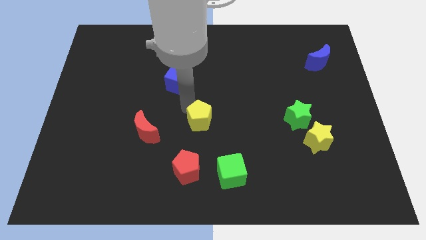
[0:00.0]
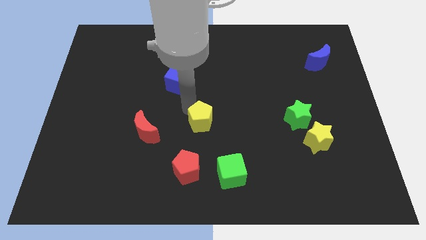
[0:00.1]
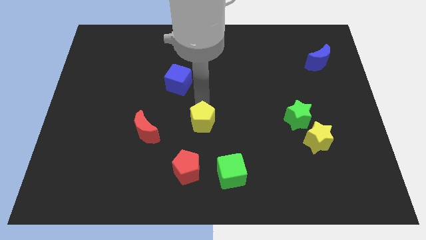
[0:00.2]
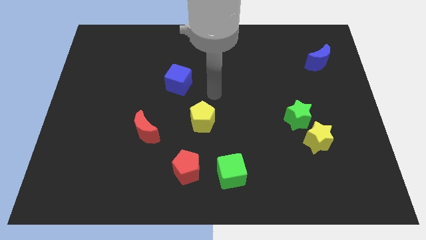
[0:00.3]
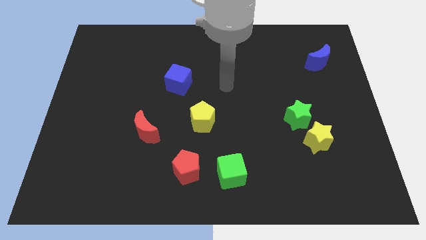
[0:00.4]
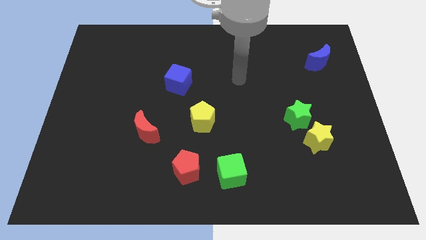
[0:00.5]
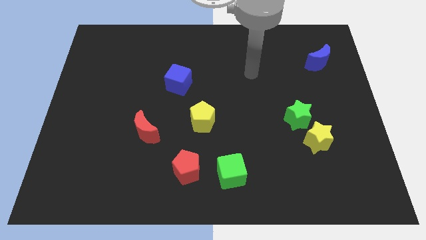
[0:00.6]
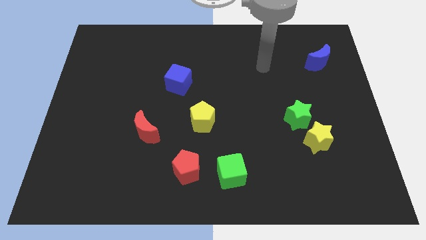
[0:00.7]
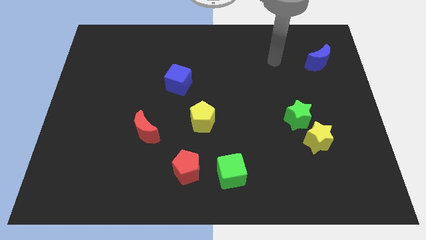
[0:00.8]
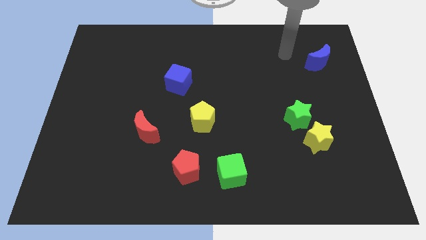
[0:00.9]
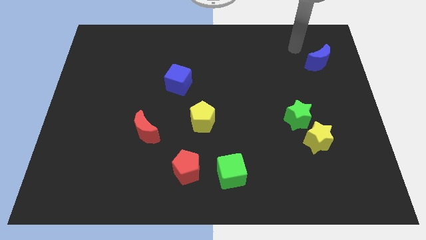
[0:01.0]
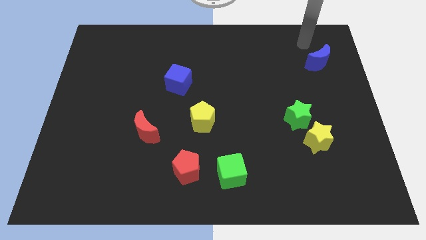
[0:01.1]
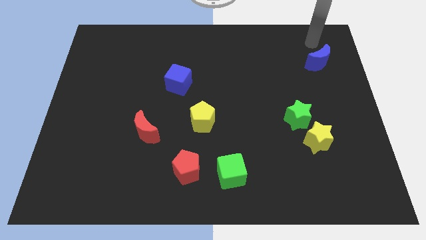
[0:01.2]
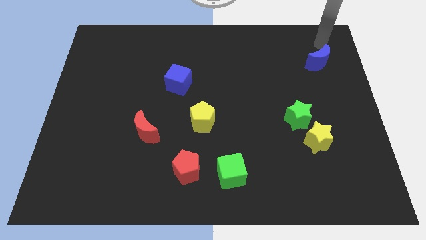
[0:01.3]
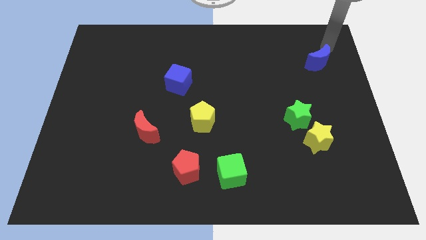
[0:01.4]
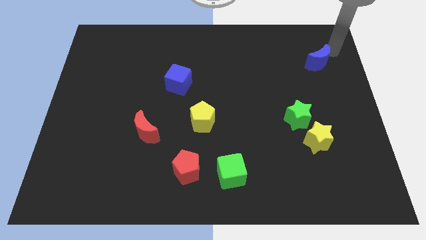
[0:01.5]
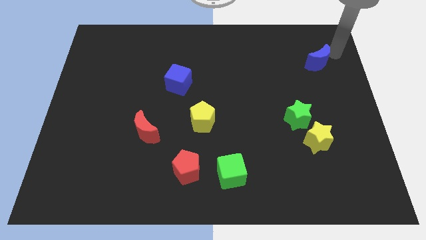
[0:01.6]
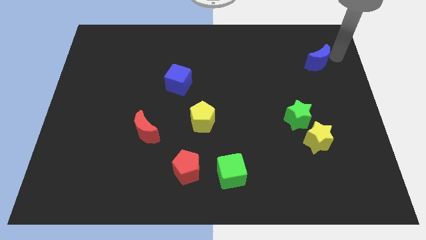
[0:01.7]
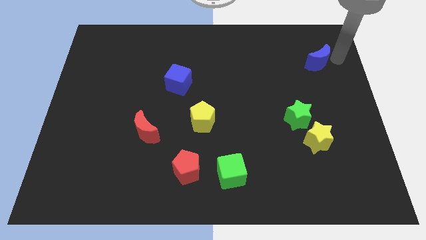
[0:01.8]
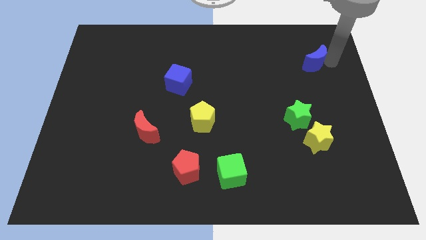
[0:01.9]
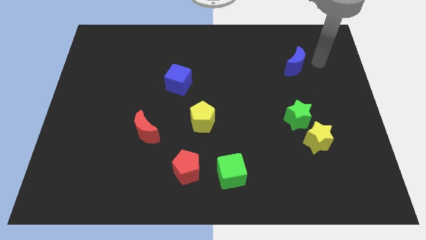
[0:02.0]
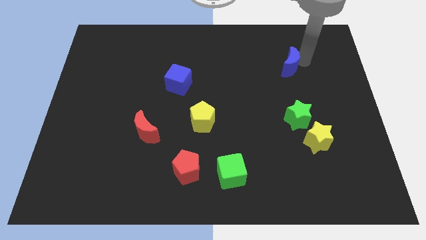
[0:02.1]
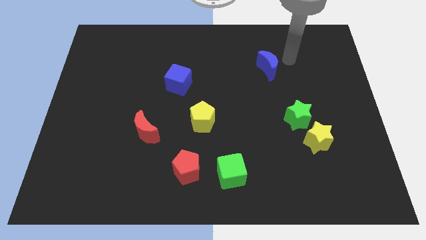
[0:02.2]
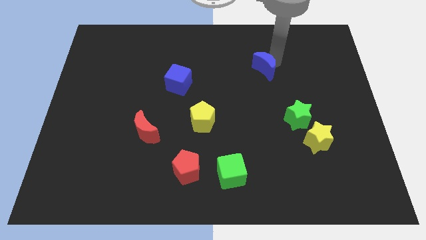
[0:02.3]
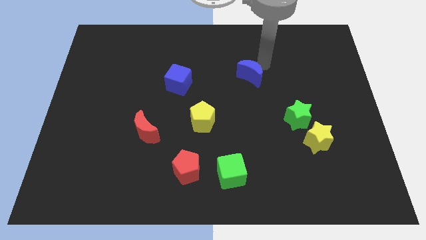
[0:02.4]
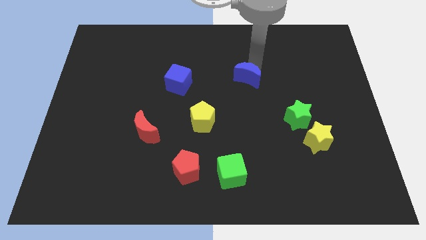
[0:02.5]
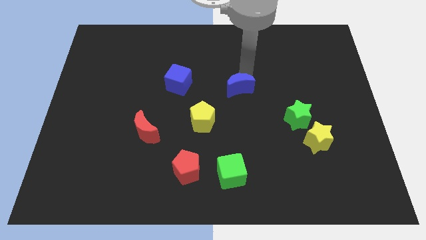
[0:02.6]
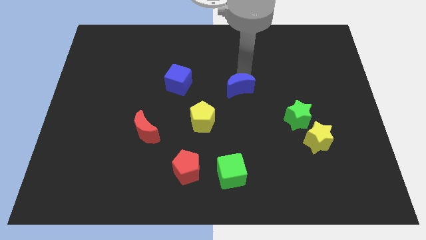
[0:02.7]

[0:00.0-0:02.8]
place the blue moon diagonally top right to the yellow pentagon

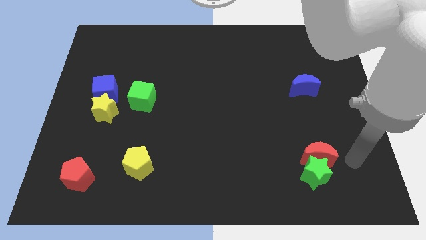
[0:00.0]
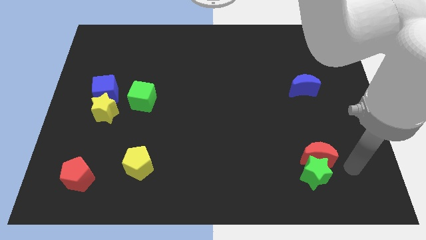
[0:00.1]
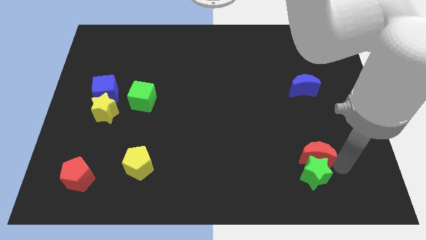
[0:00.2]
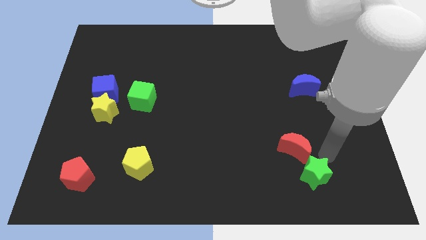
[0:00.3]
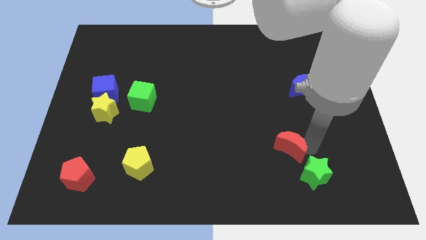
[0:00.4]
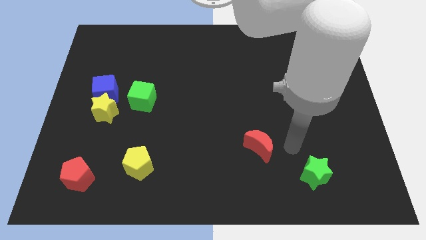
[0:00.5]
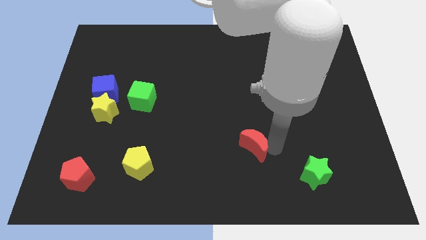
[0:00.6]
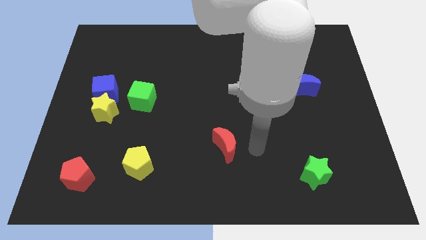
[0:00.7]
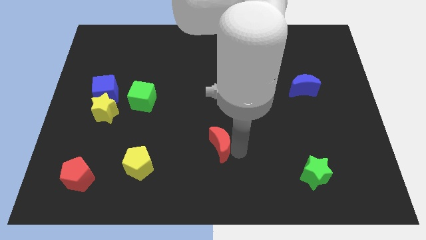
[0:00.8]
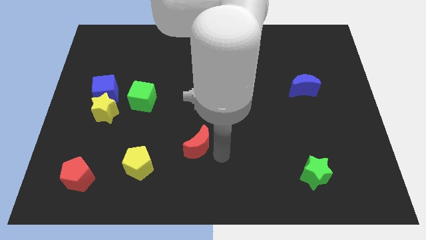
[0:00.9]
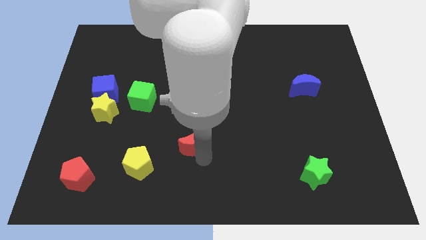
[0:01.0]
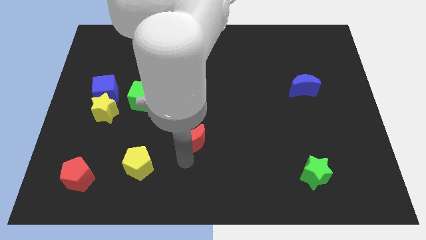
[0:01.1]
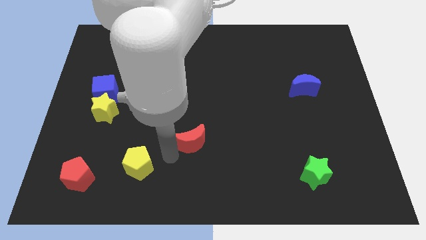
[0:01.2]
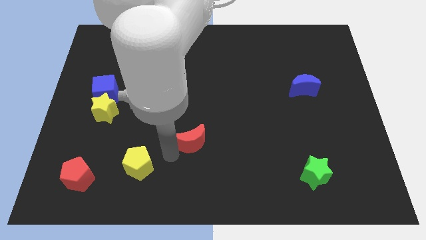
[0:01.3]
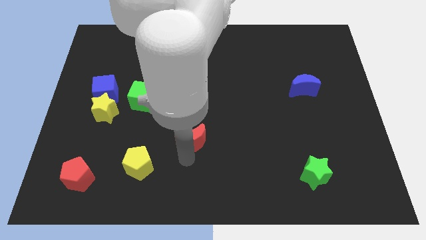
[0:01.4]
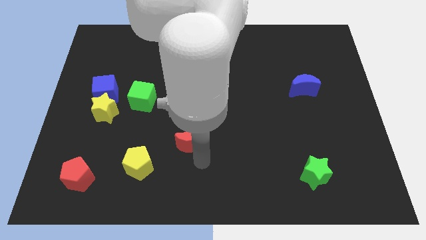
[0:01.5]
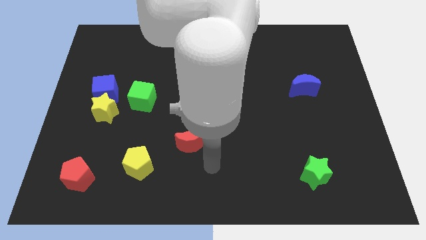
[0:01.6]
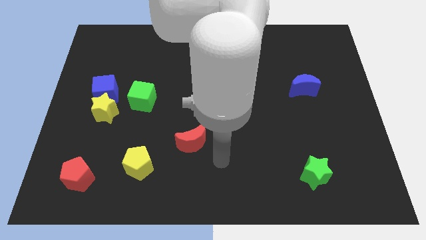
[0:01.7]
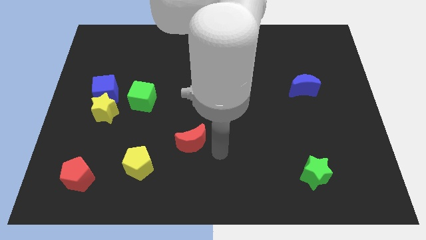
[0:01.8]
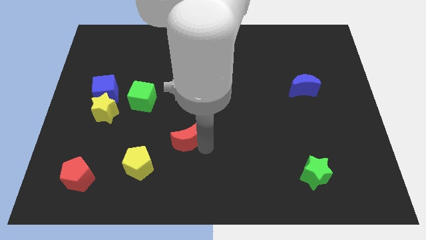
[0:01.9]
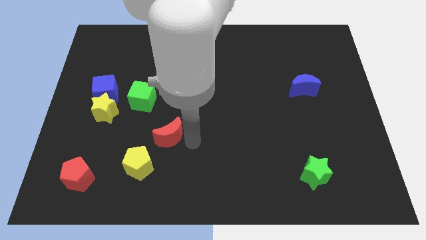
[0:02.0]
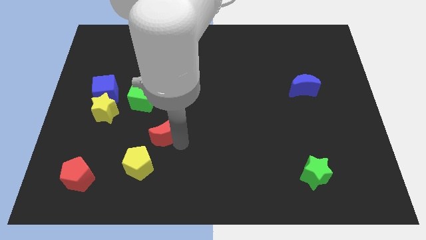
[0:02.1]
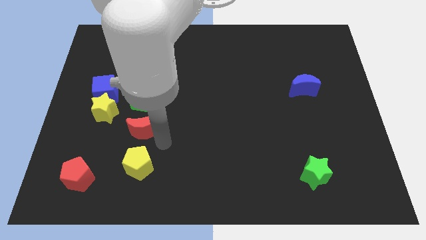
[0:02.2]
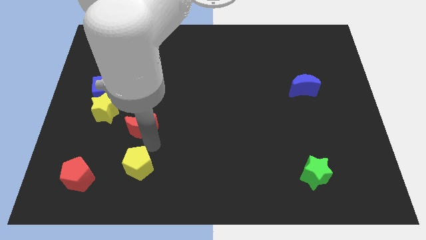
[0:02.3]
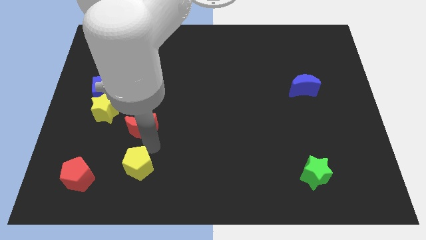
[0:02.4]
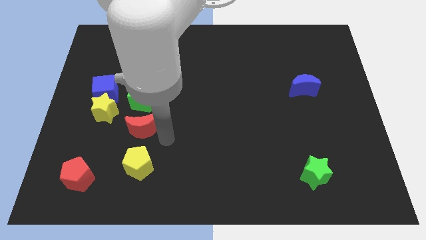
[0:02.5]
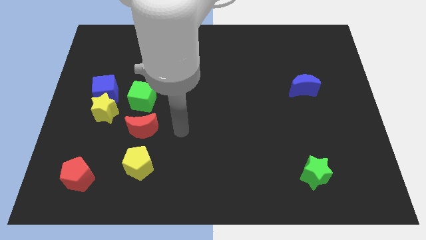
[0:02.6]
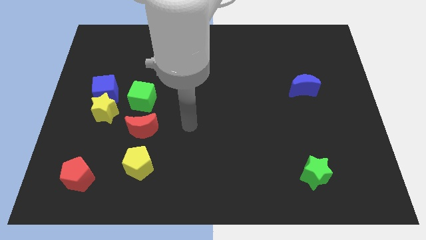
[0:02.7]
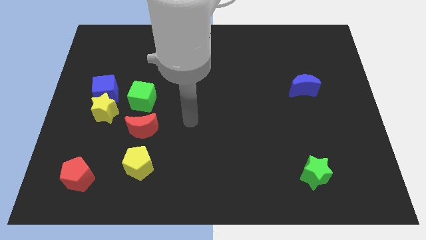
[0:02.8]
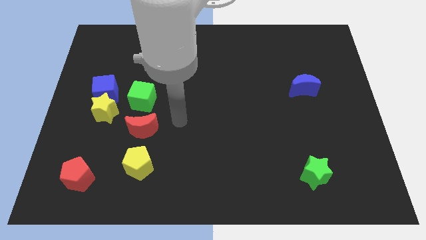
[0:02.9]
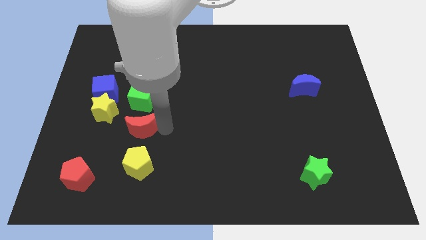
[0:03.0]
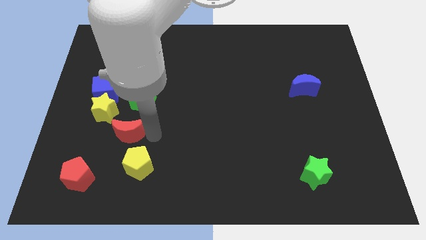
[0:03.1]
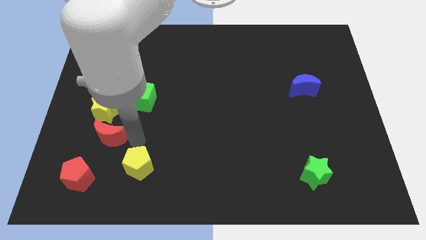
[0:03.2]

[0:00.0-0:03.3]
push the red crescent to the top of red pentagon

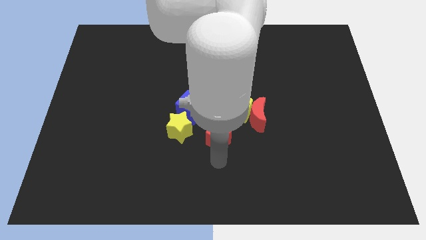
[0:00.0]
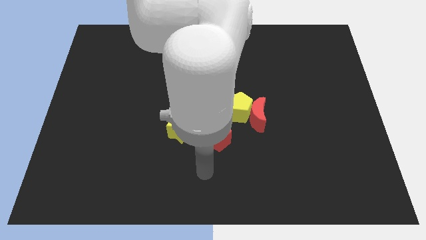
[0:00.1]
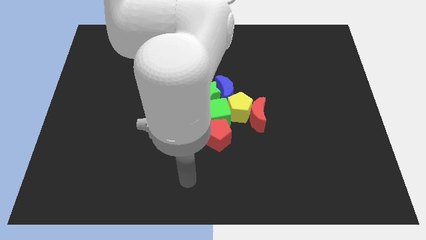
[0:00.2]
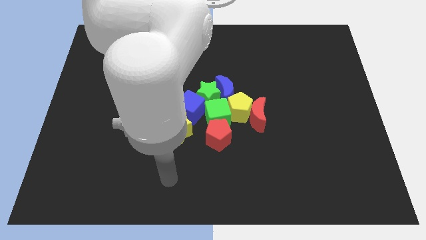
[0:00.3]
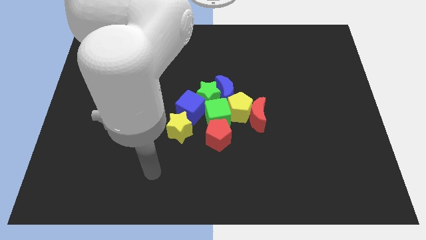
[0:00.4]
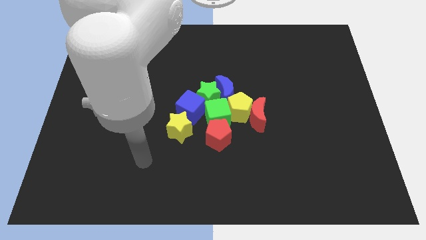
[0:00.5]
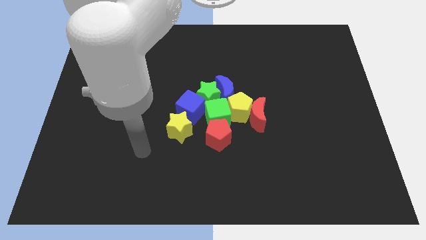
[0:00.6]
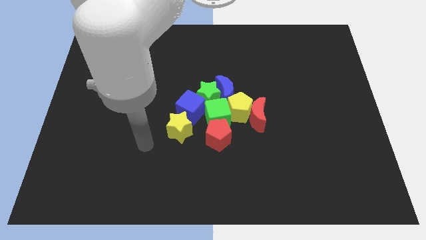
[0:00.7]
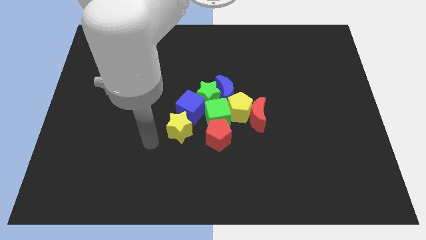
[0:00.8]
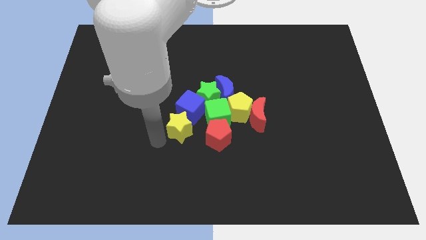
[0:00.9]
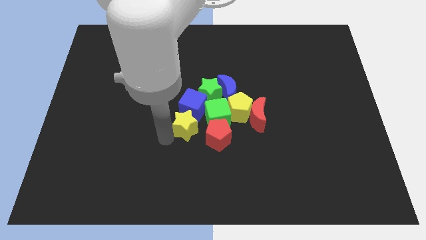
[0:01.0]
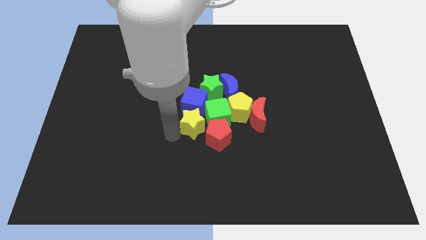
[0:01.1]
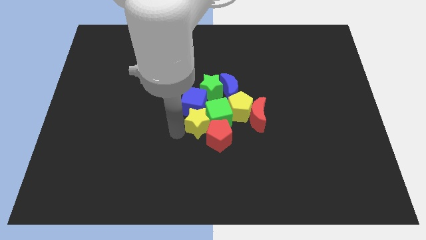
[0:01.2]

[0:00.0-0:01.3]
move away from the red pentagon

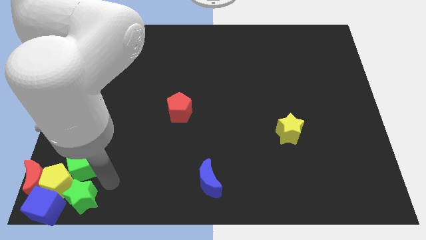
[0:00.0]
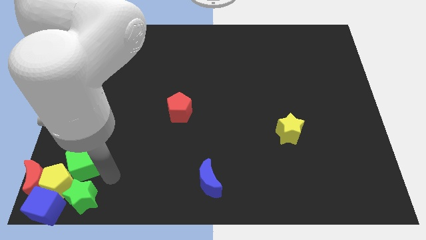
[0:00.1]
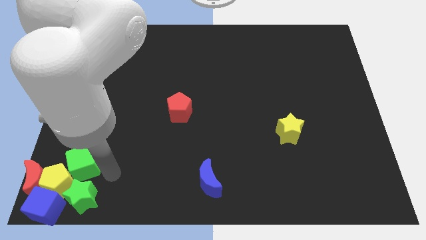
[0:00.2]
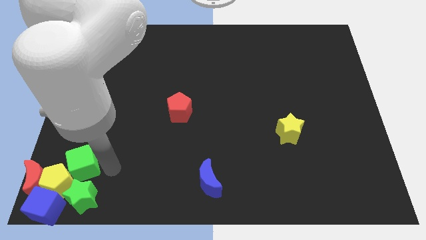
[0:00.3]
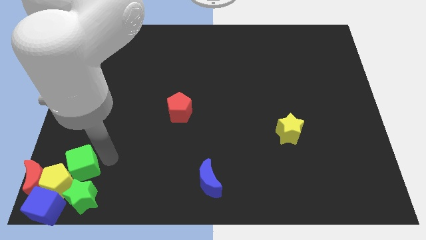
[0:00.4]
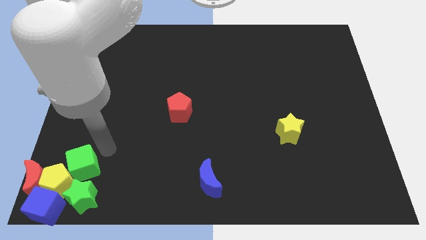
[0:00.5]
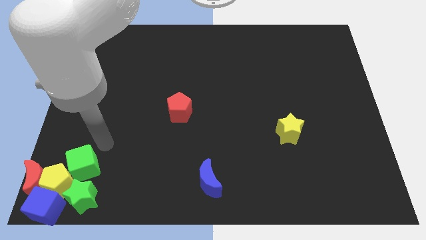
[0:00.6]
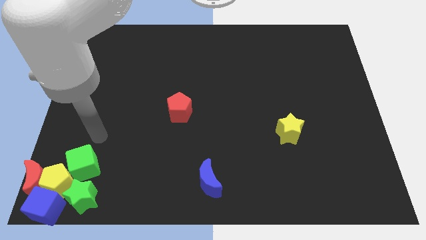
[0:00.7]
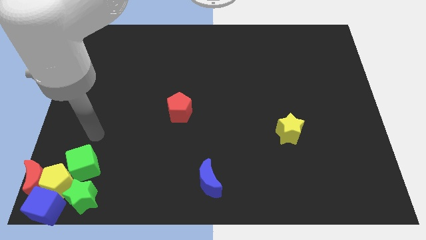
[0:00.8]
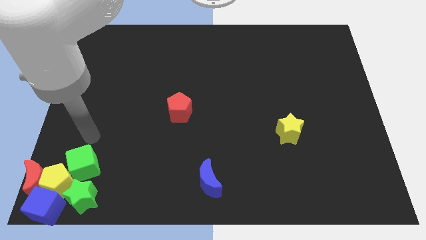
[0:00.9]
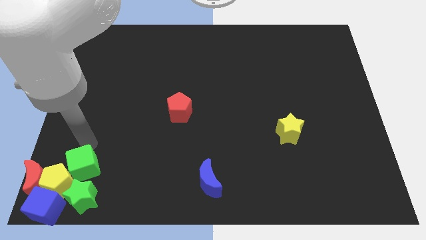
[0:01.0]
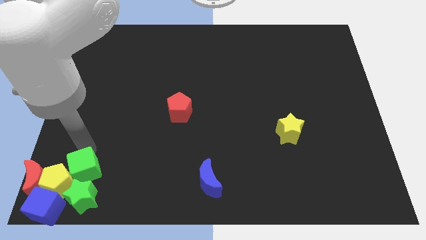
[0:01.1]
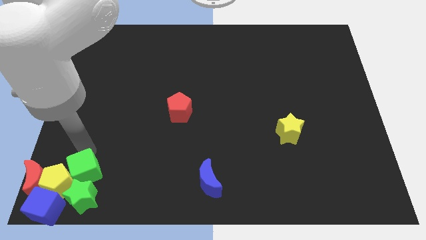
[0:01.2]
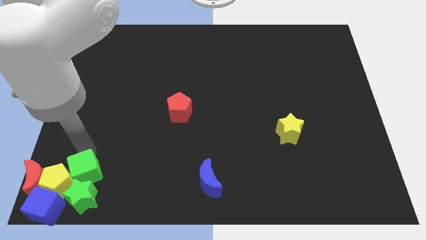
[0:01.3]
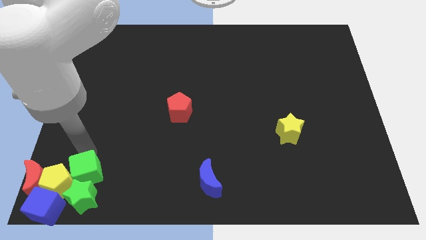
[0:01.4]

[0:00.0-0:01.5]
push the green cube slightly towards the green star
